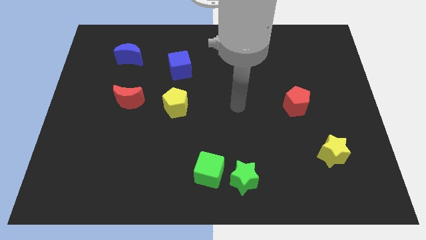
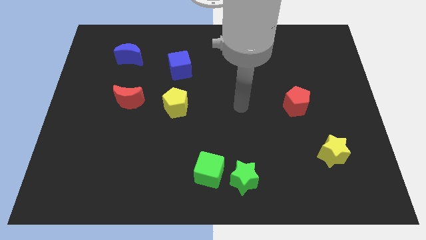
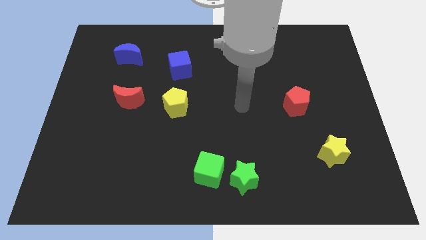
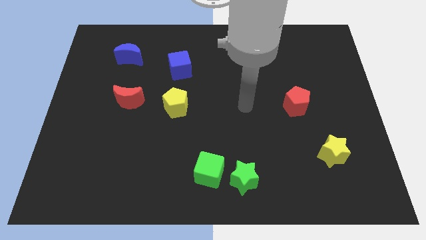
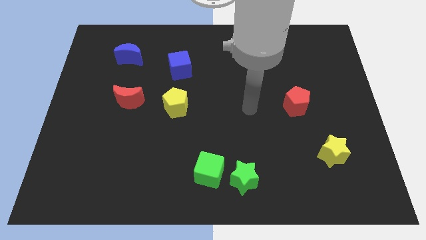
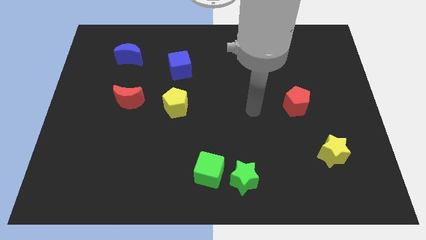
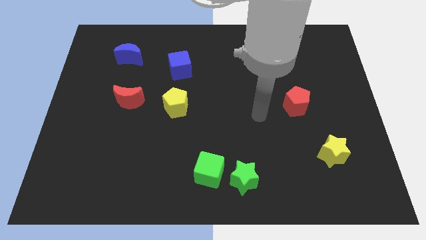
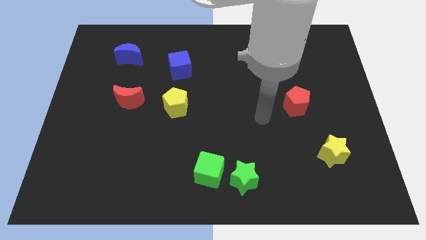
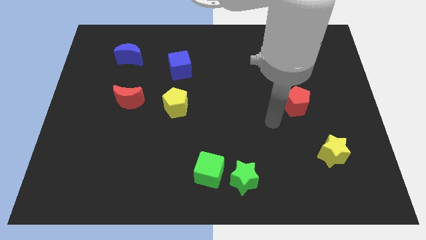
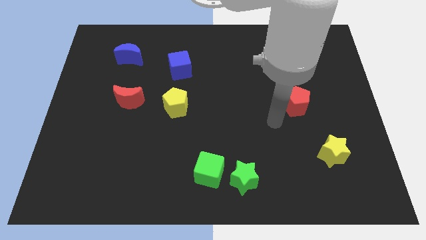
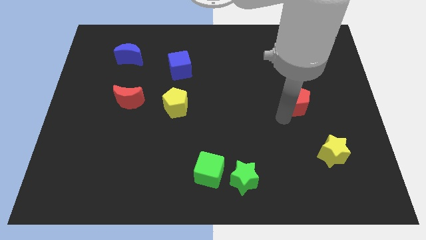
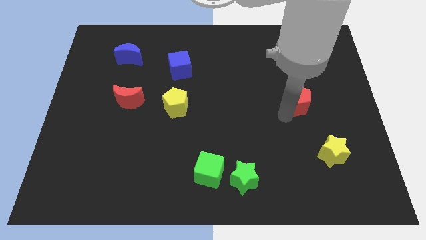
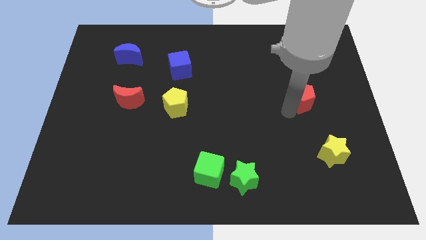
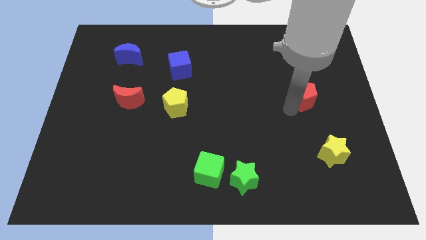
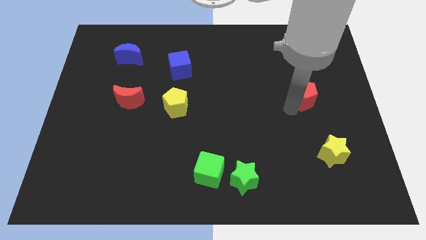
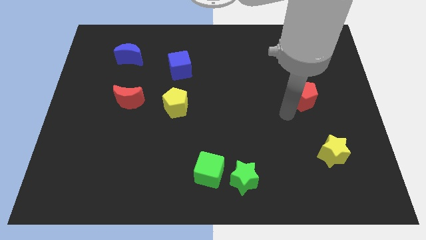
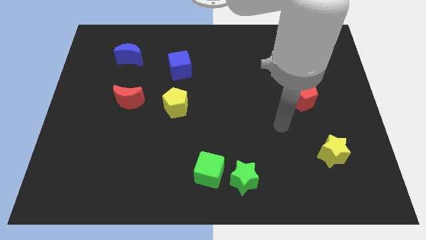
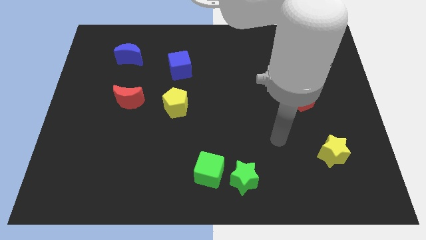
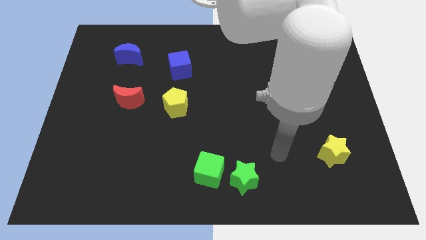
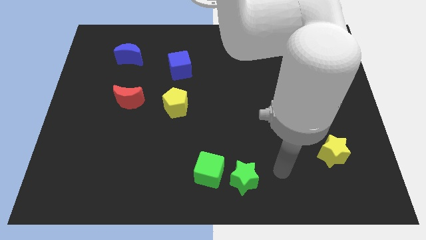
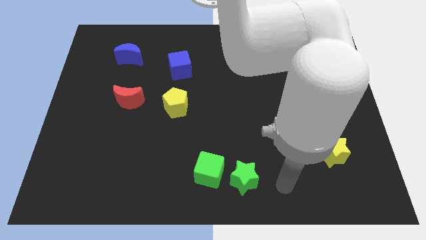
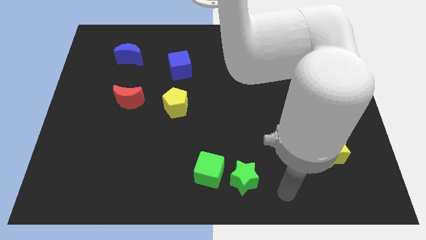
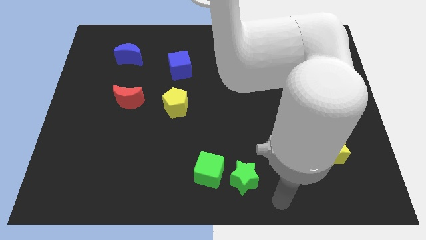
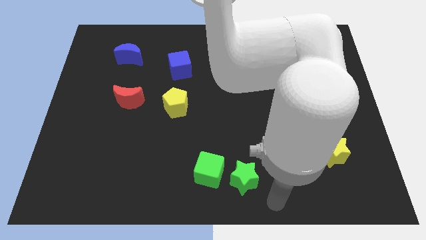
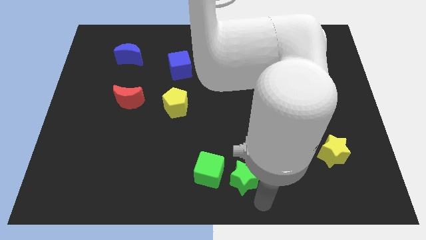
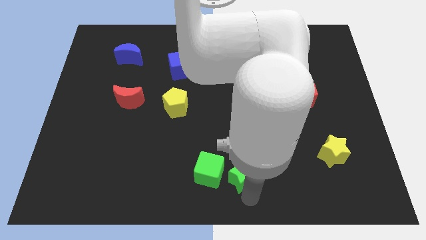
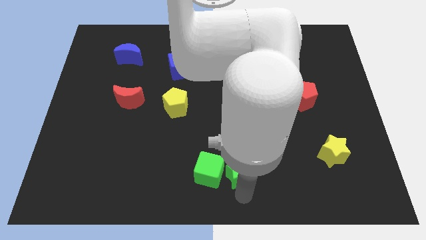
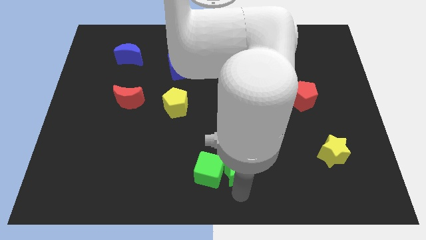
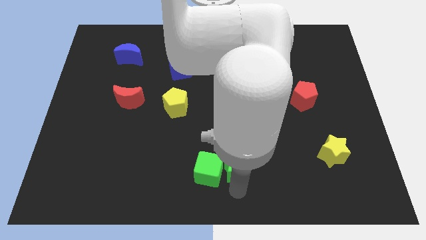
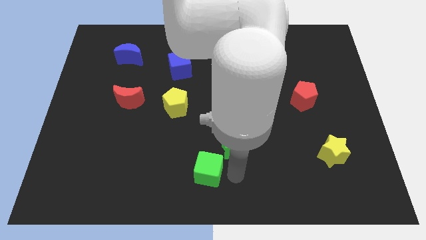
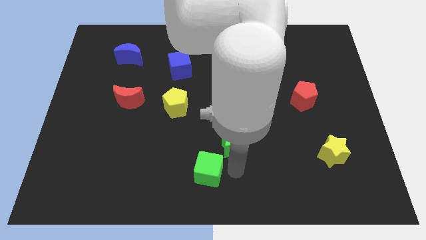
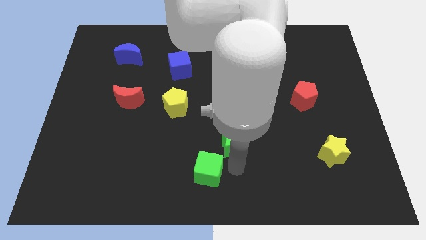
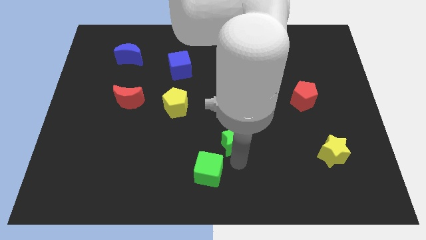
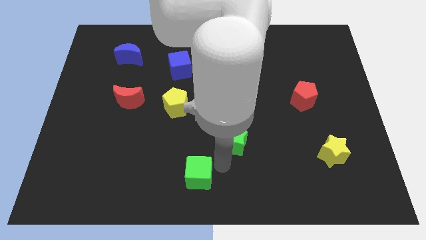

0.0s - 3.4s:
move green star slightly up

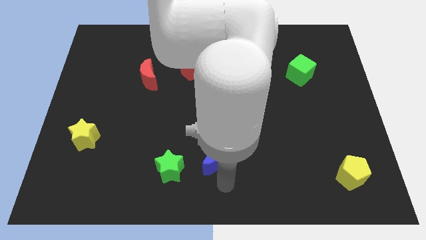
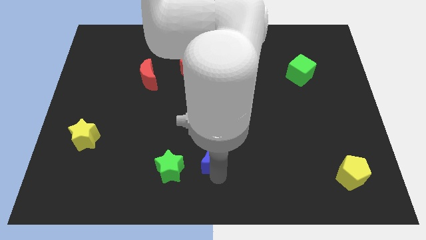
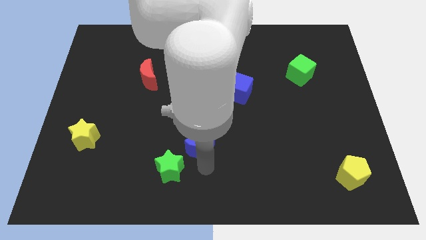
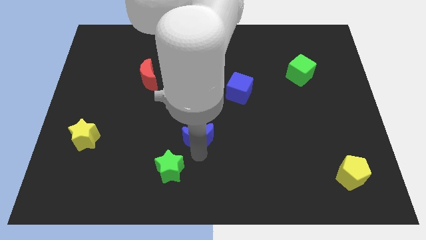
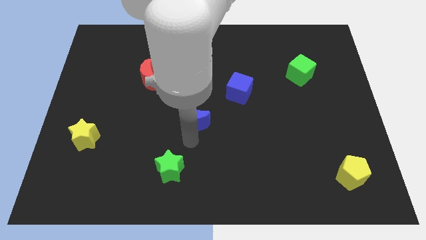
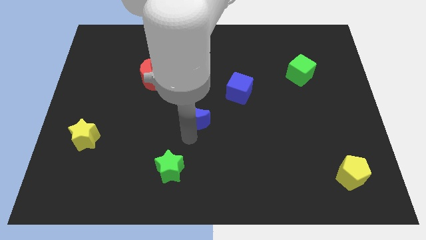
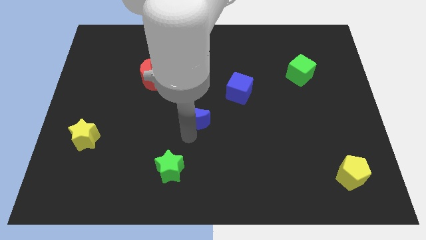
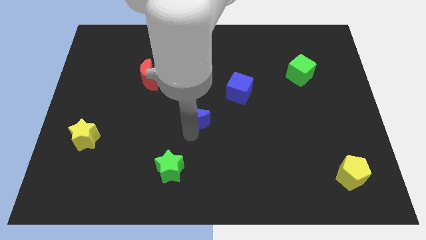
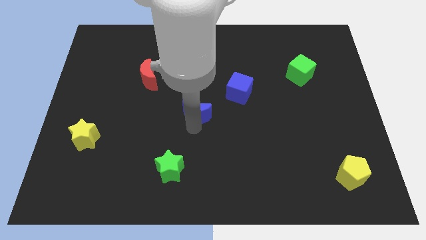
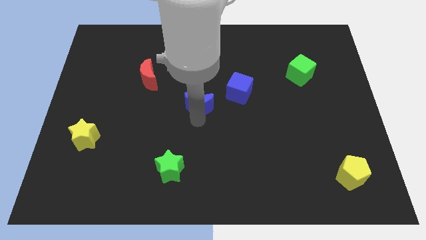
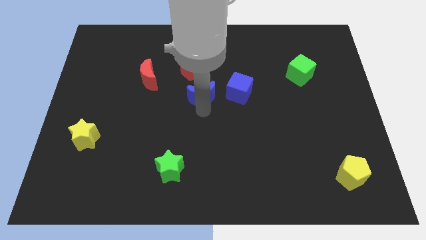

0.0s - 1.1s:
place blue moon to the left of blue cube

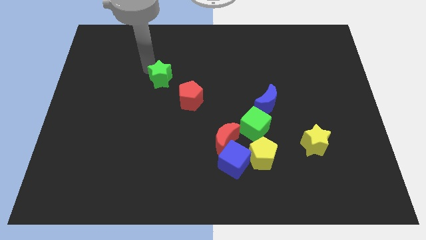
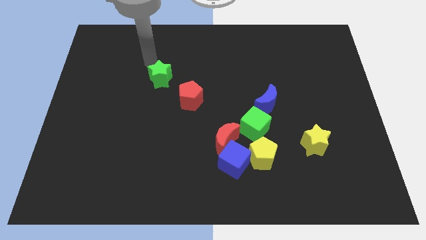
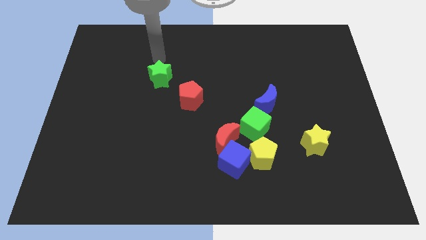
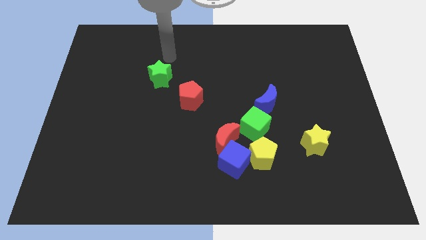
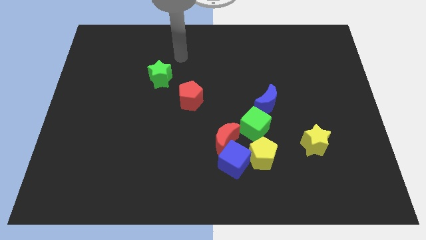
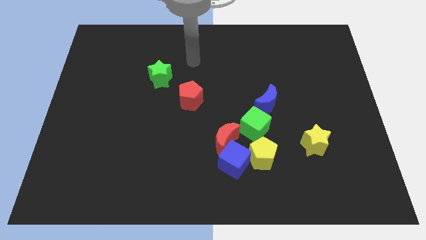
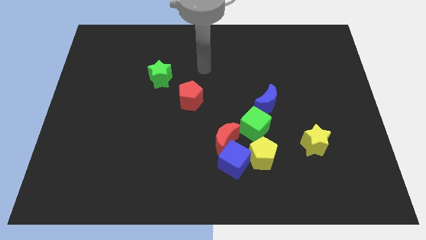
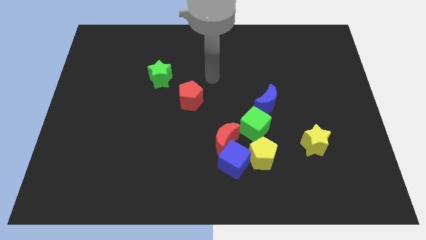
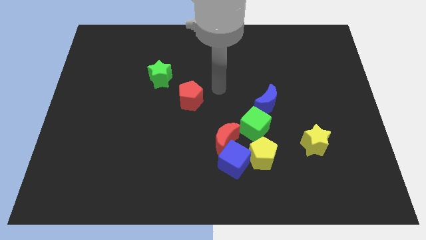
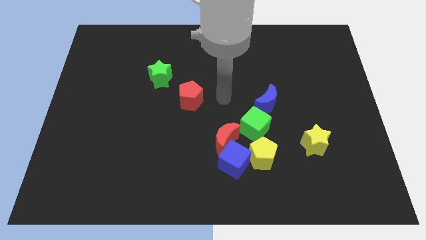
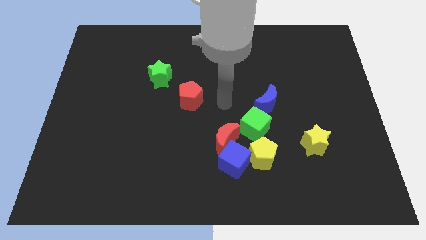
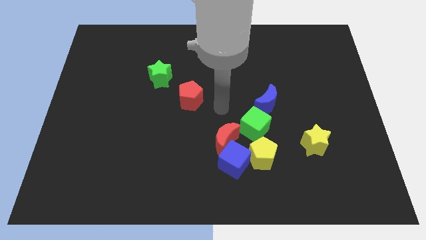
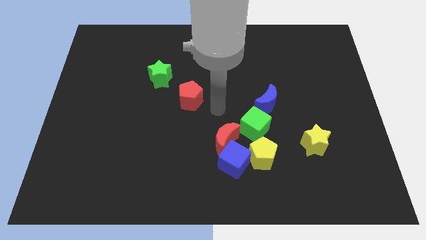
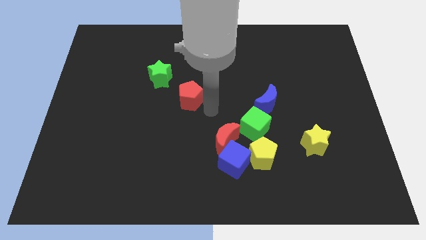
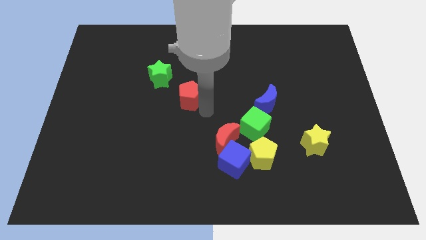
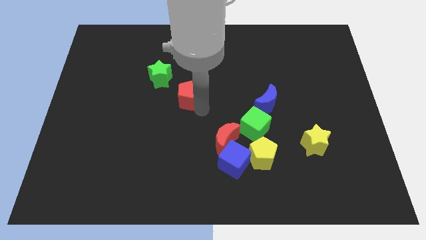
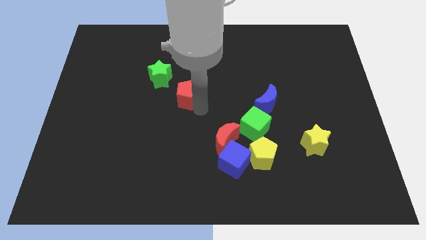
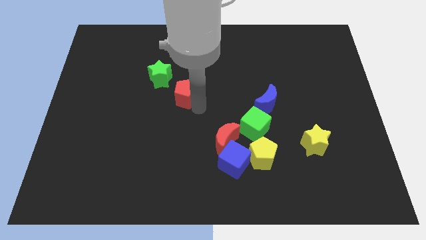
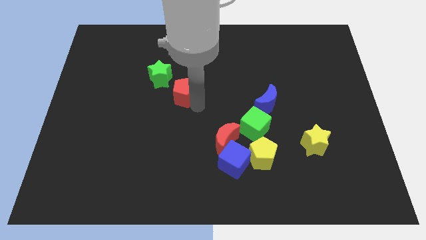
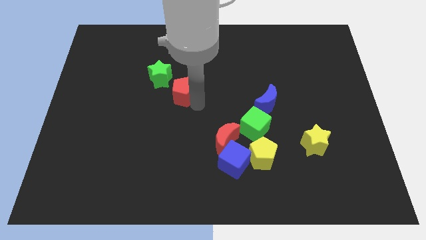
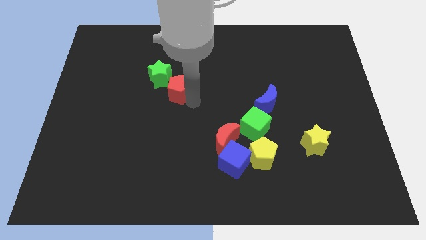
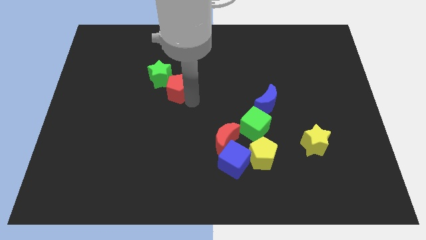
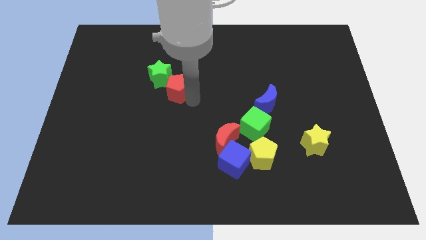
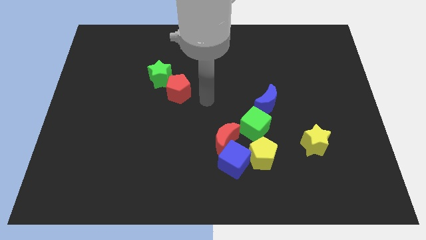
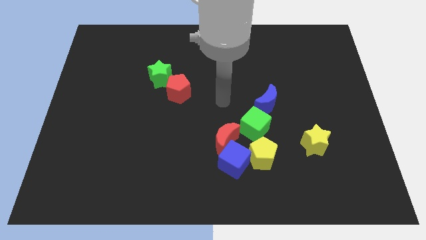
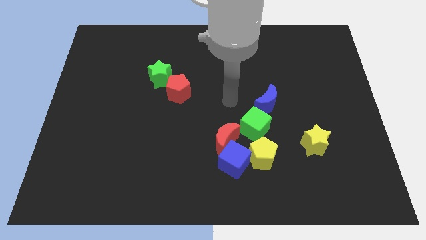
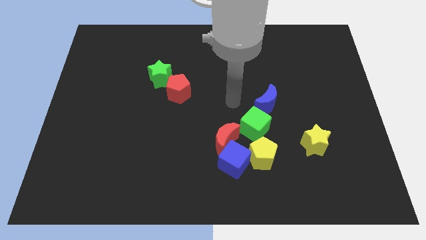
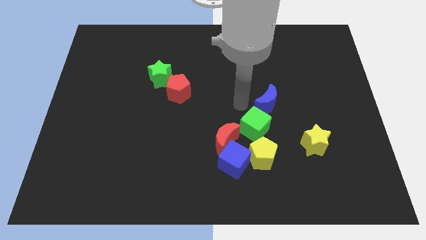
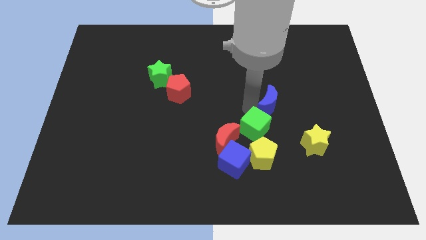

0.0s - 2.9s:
push the red pentagon towards the green star in diagonal form

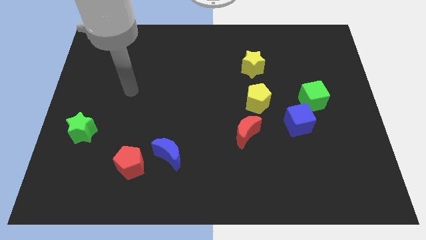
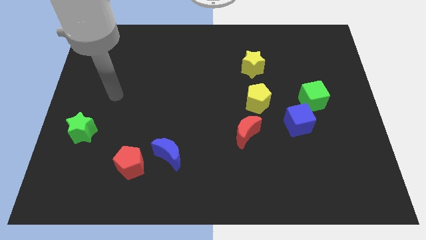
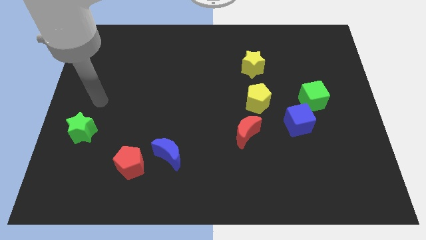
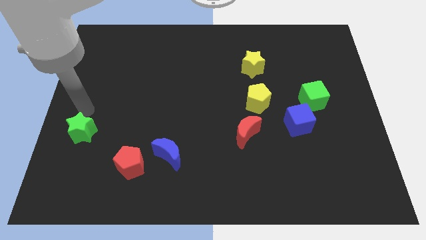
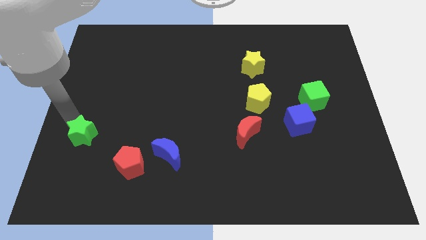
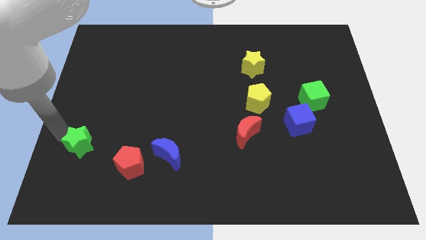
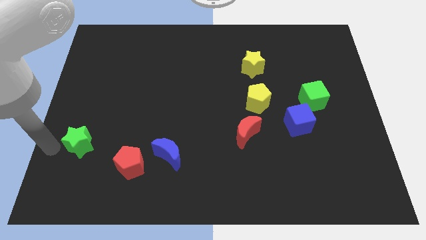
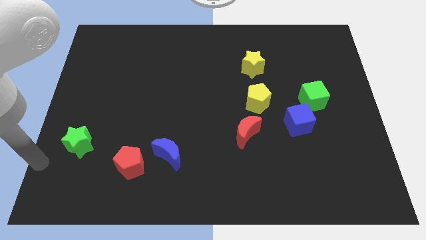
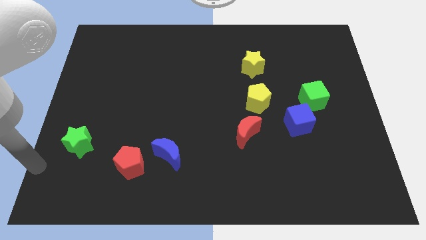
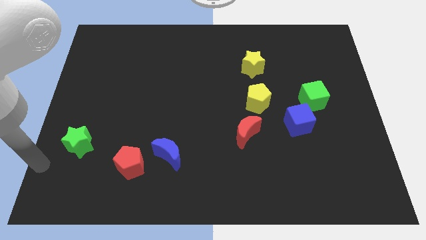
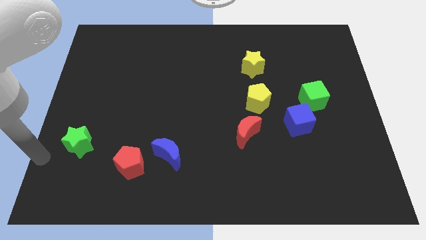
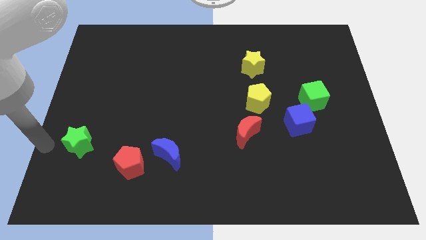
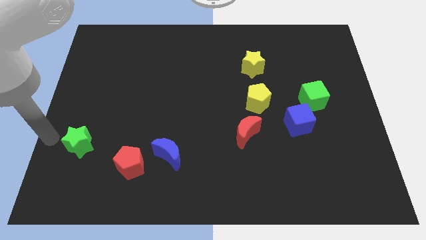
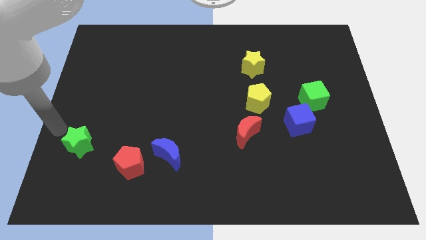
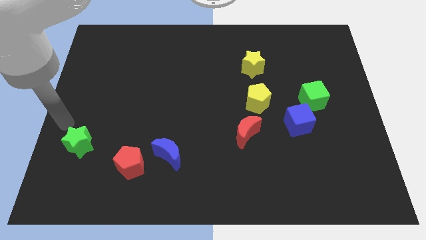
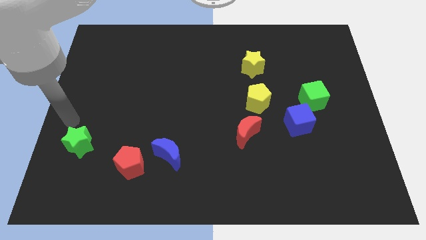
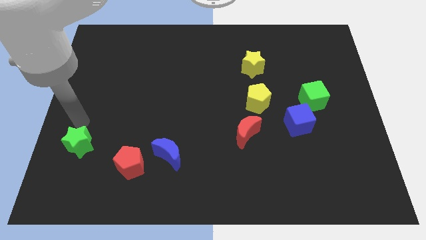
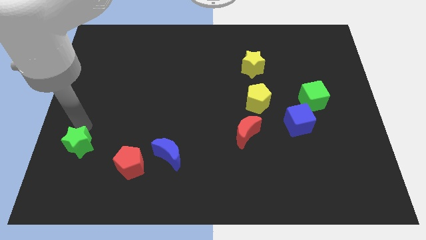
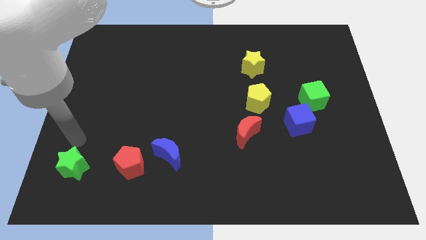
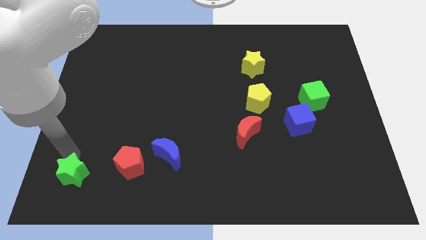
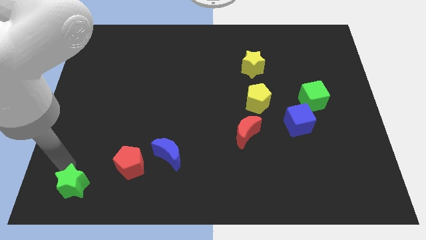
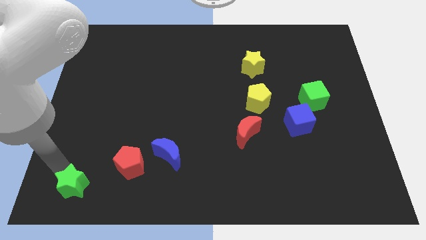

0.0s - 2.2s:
move the green star slightly downwards to the bottom left of the board
